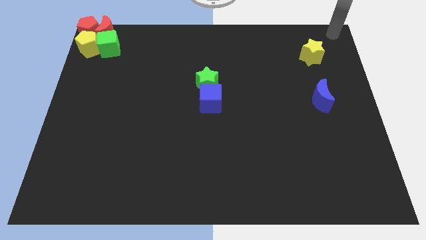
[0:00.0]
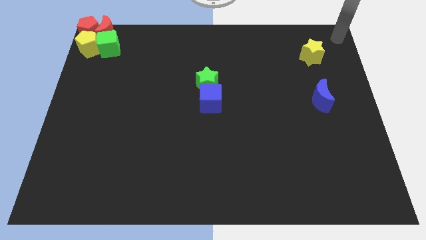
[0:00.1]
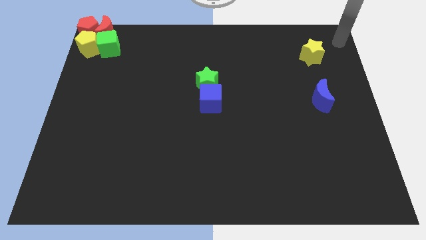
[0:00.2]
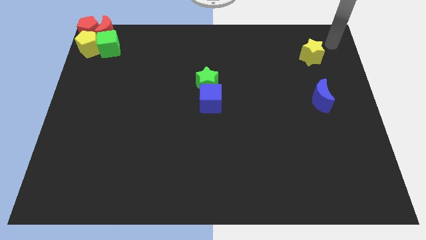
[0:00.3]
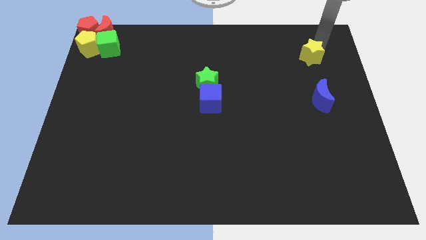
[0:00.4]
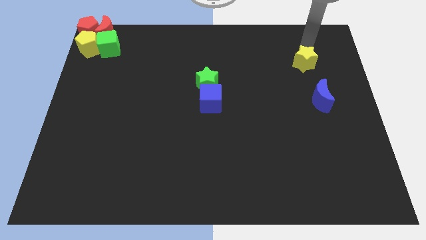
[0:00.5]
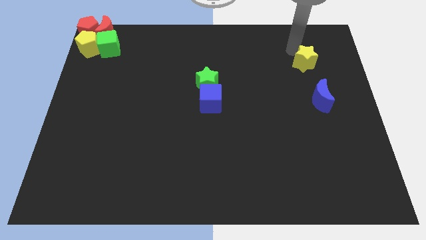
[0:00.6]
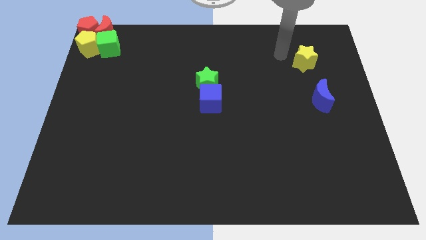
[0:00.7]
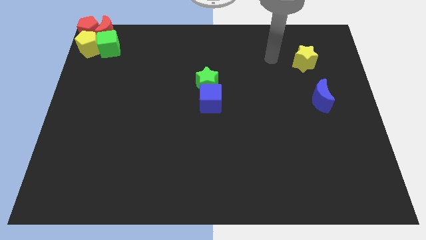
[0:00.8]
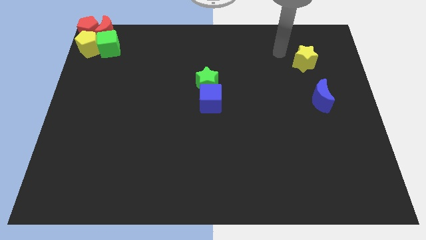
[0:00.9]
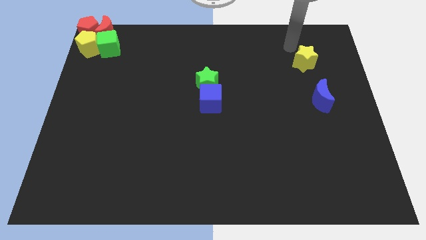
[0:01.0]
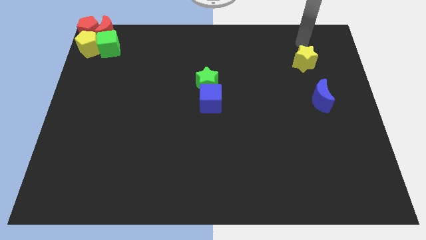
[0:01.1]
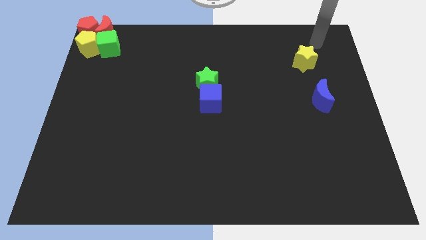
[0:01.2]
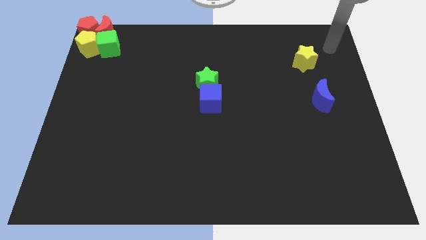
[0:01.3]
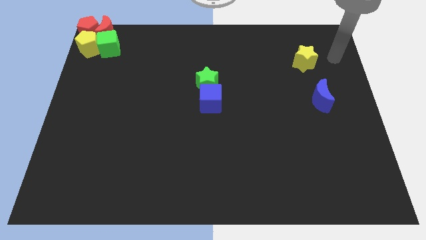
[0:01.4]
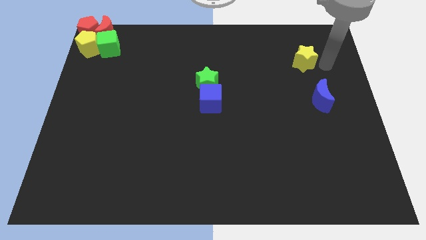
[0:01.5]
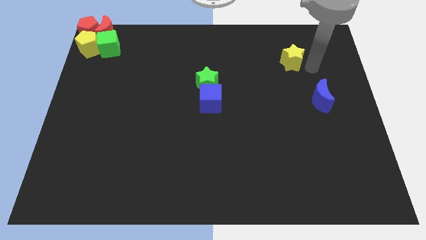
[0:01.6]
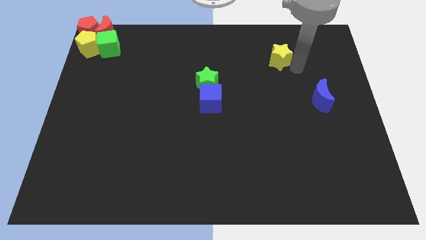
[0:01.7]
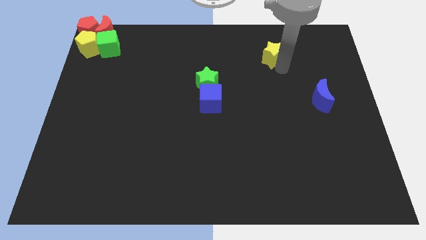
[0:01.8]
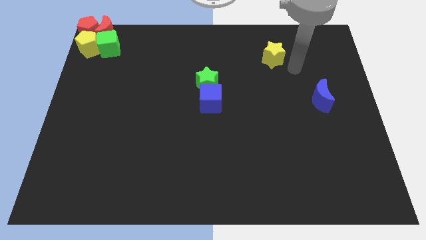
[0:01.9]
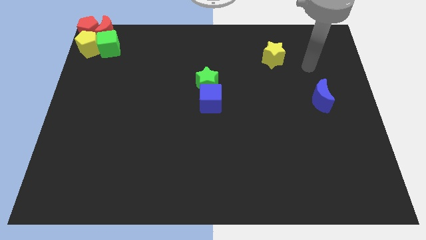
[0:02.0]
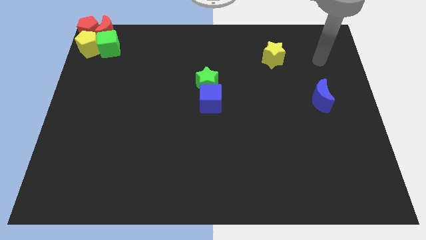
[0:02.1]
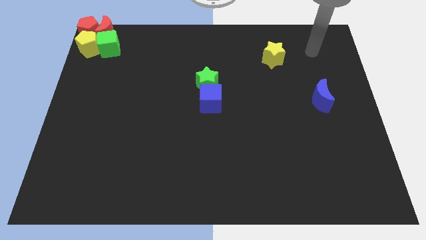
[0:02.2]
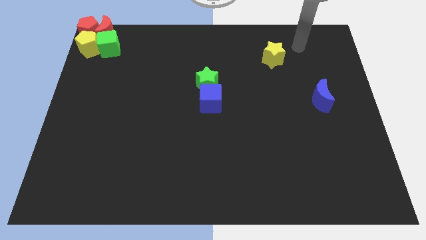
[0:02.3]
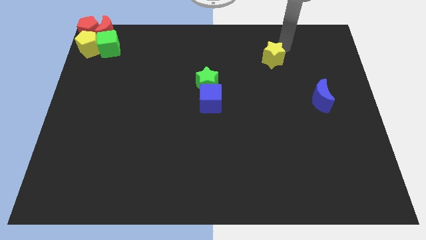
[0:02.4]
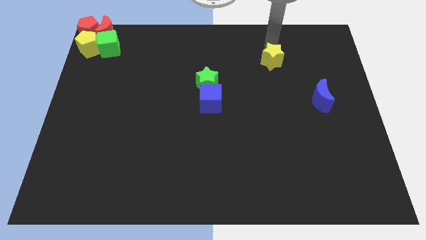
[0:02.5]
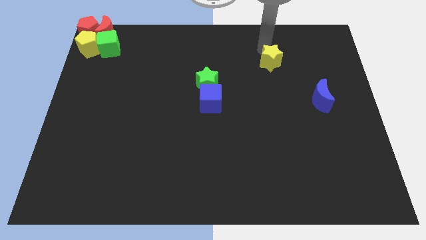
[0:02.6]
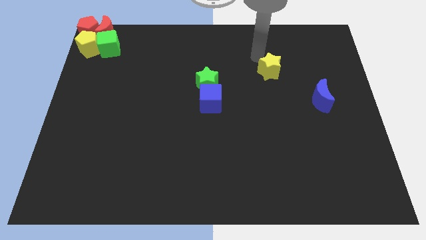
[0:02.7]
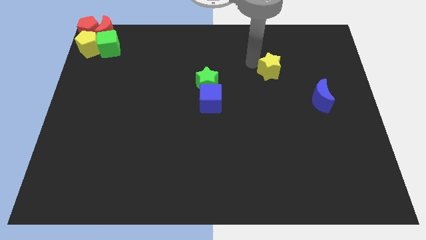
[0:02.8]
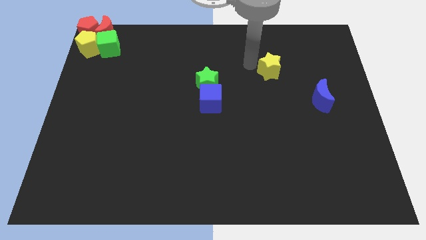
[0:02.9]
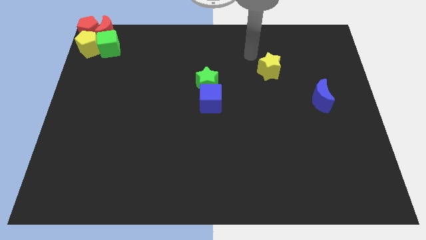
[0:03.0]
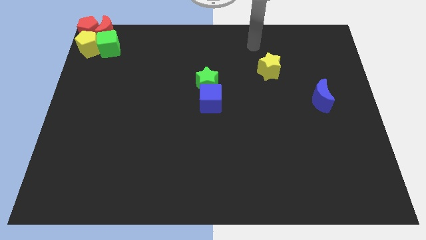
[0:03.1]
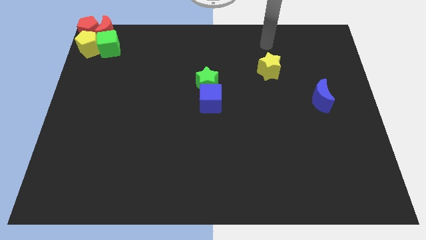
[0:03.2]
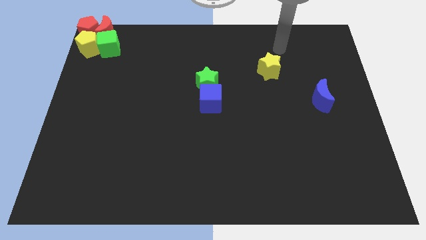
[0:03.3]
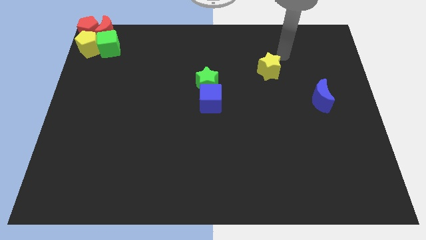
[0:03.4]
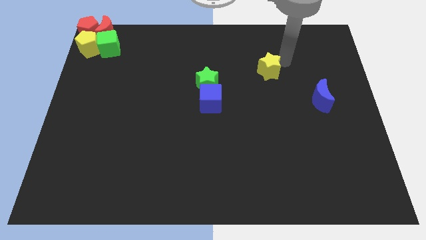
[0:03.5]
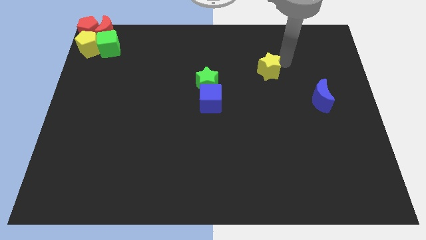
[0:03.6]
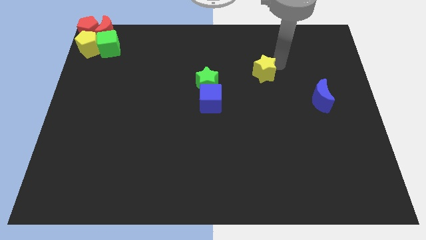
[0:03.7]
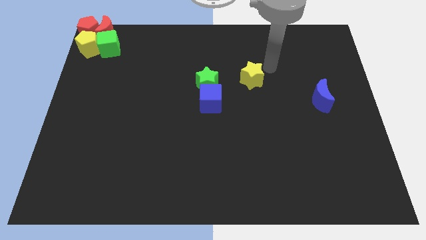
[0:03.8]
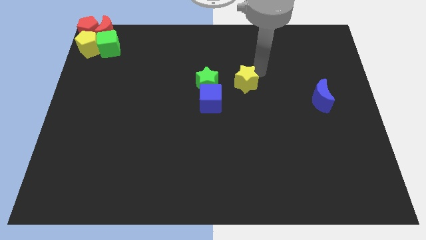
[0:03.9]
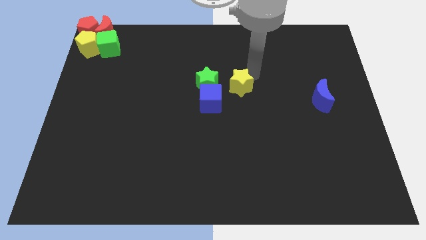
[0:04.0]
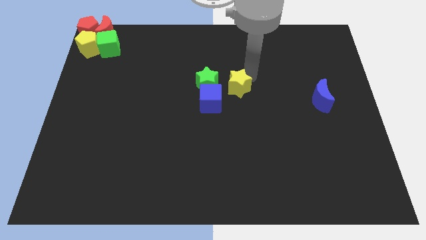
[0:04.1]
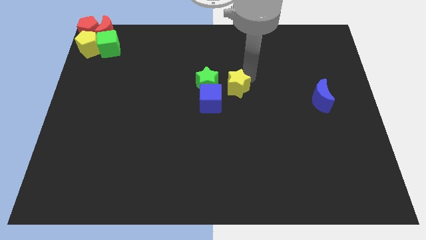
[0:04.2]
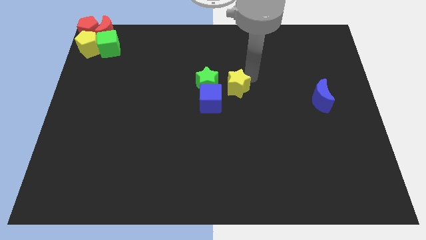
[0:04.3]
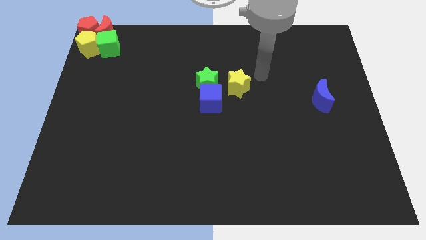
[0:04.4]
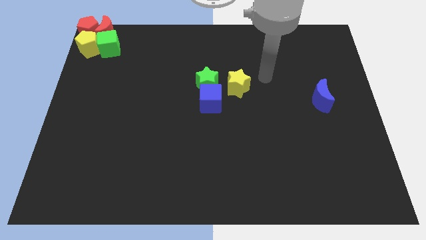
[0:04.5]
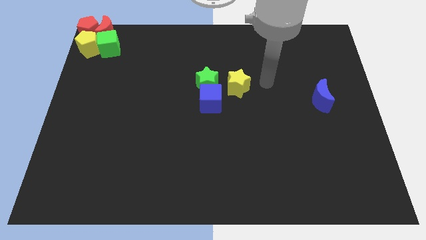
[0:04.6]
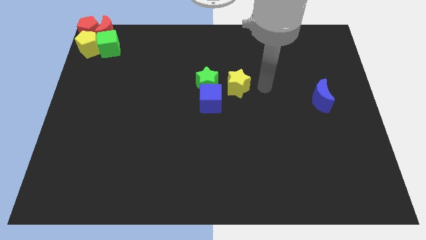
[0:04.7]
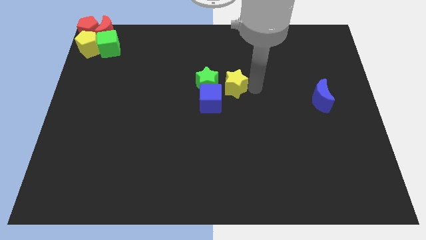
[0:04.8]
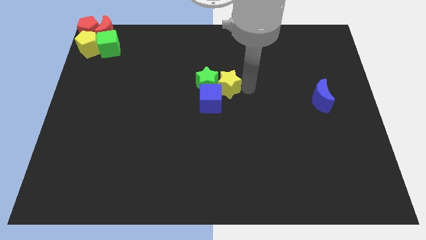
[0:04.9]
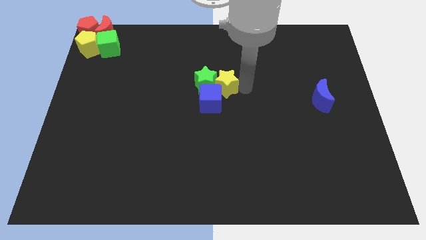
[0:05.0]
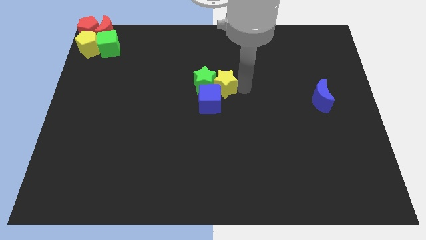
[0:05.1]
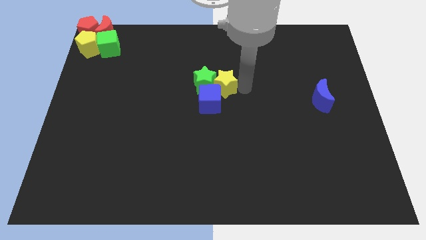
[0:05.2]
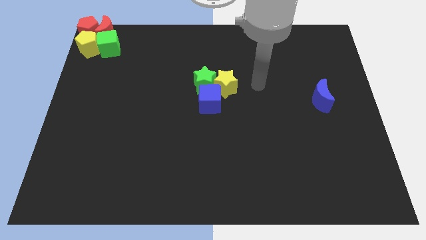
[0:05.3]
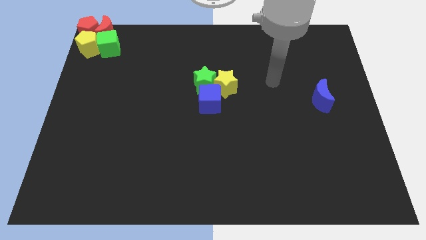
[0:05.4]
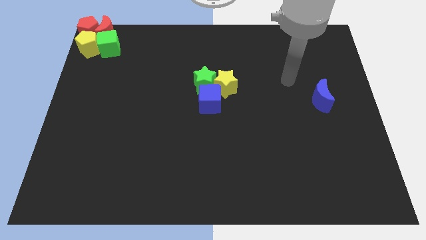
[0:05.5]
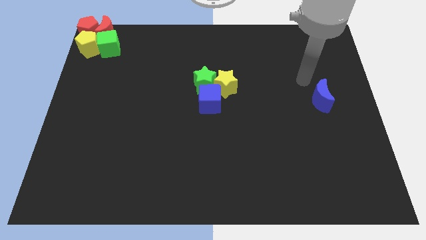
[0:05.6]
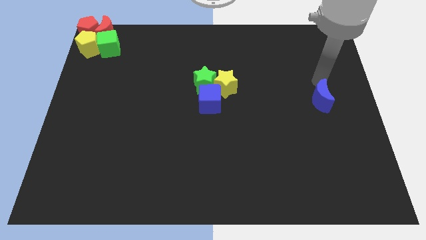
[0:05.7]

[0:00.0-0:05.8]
push the yellow star into the green star

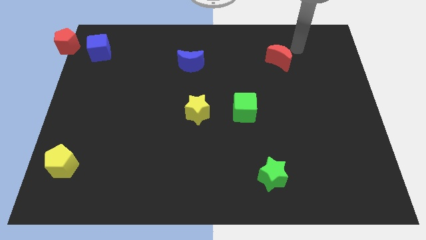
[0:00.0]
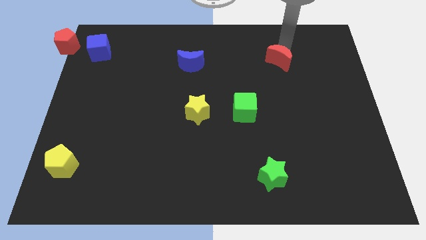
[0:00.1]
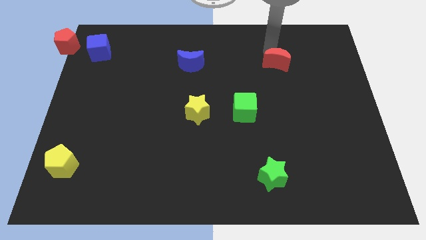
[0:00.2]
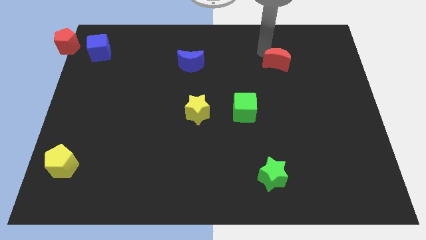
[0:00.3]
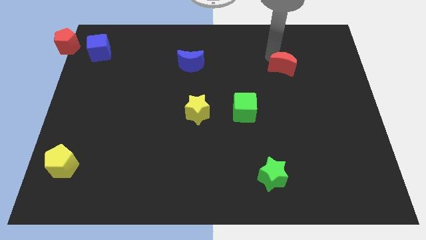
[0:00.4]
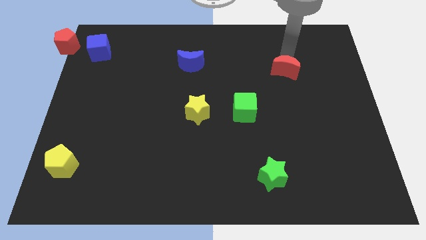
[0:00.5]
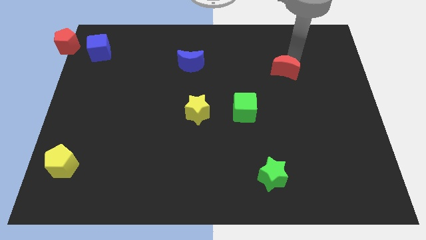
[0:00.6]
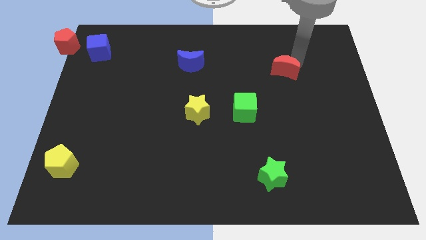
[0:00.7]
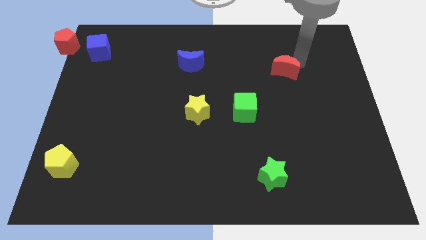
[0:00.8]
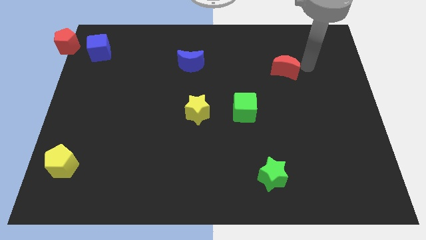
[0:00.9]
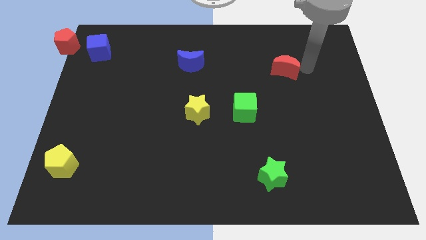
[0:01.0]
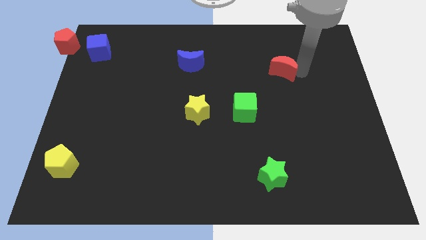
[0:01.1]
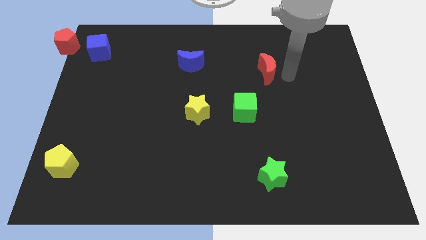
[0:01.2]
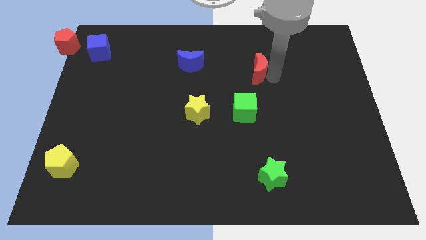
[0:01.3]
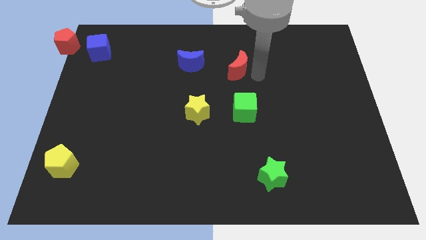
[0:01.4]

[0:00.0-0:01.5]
push red crescent above green cube

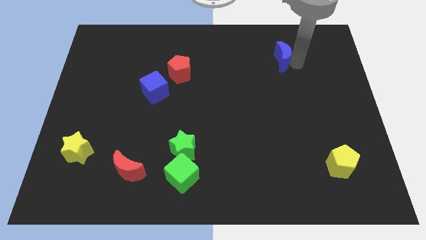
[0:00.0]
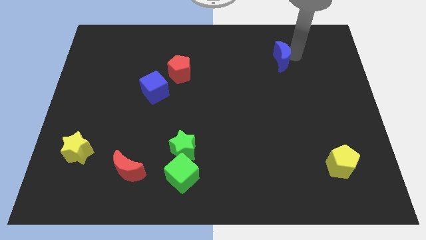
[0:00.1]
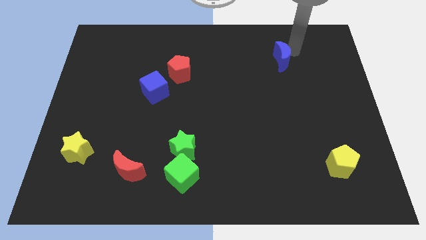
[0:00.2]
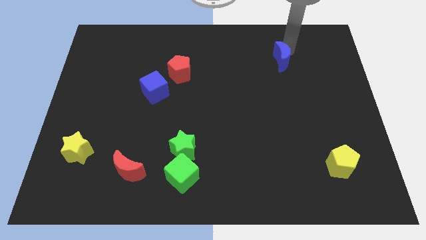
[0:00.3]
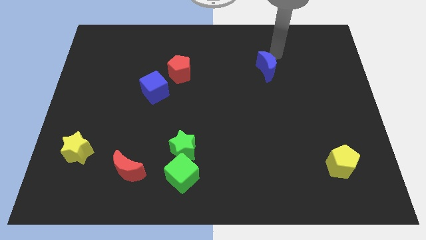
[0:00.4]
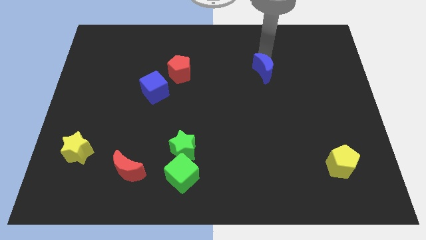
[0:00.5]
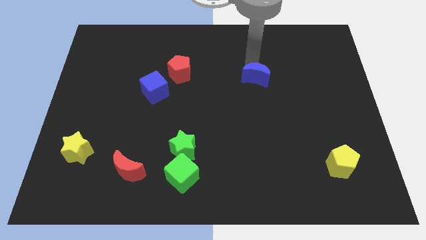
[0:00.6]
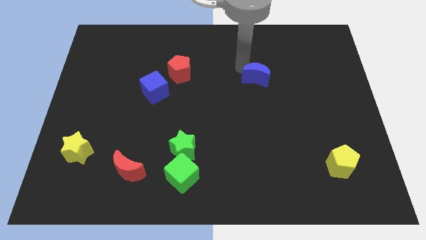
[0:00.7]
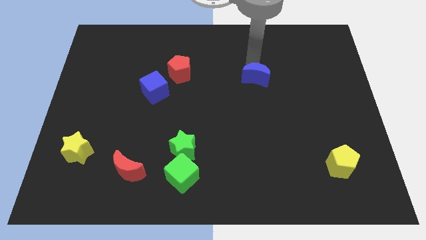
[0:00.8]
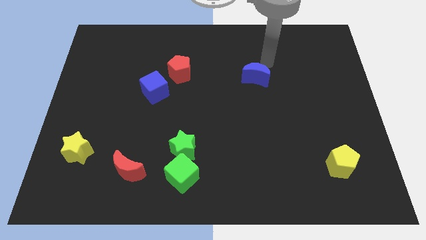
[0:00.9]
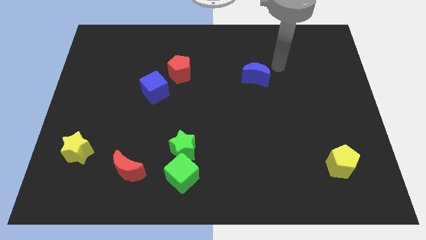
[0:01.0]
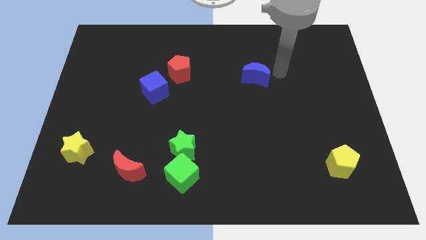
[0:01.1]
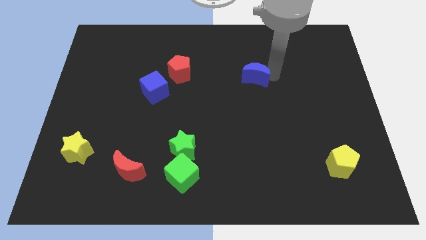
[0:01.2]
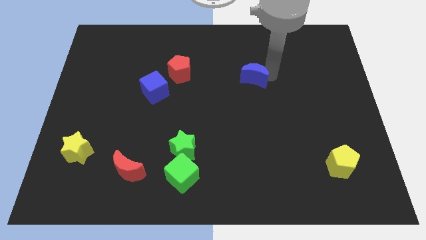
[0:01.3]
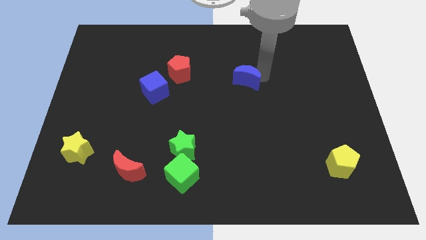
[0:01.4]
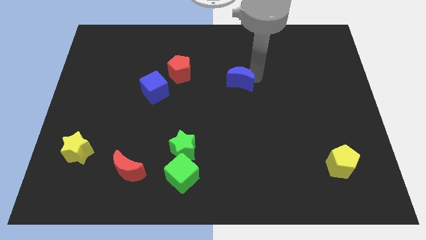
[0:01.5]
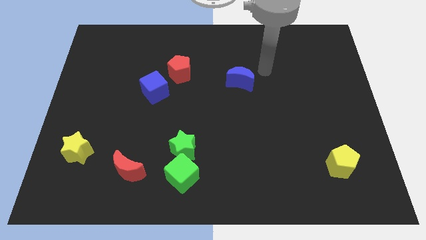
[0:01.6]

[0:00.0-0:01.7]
drag the blue moon diagonally bottom right to the red pentagon

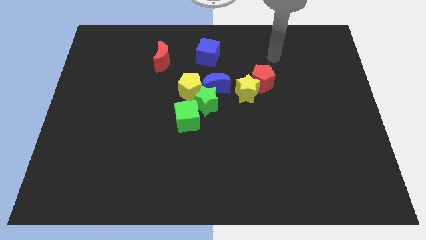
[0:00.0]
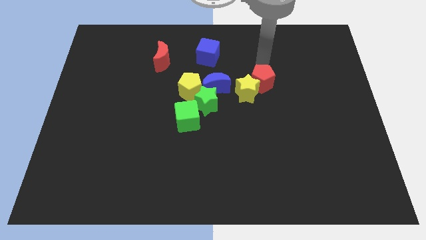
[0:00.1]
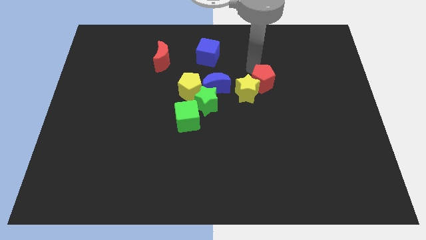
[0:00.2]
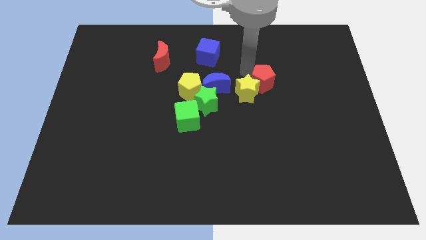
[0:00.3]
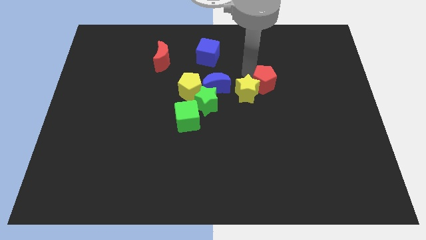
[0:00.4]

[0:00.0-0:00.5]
touch the red pentagon
